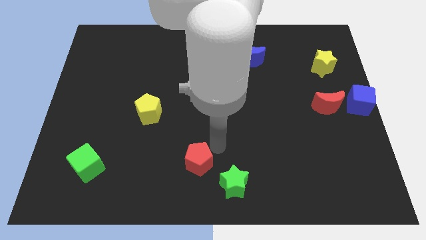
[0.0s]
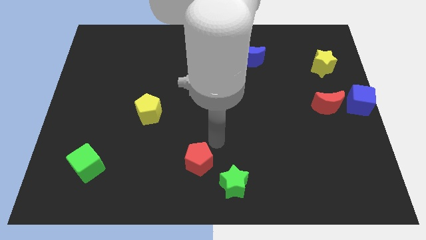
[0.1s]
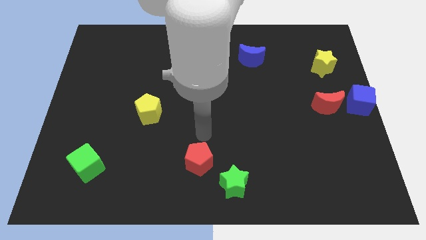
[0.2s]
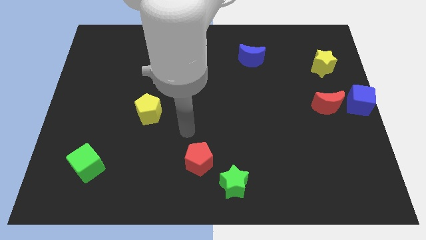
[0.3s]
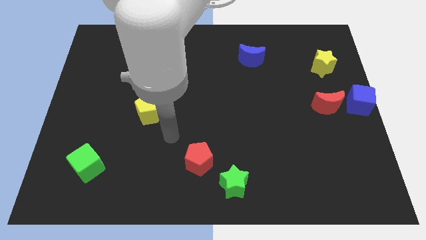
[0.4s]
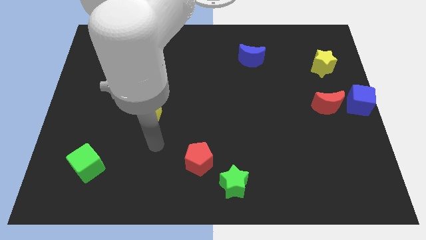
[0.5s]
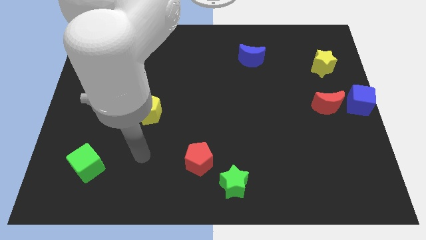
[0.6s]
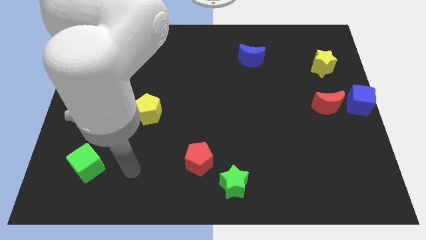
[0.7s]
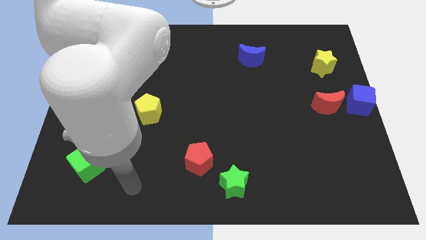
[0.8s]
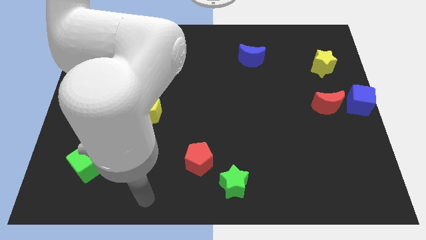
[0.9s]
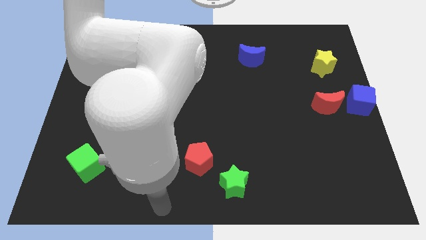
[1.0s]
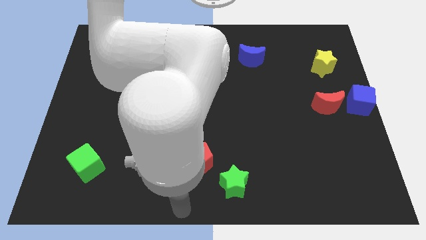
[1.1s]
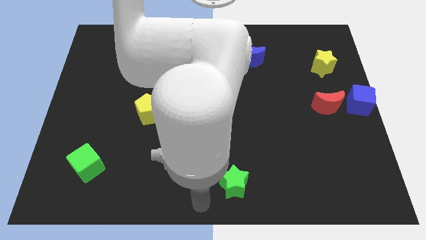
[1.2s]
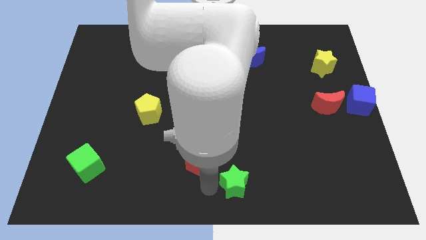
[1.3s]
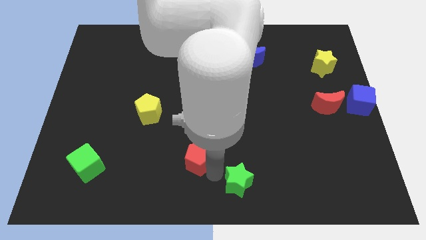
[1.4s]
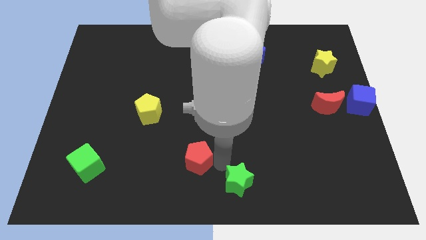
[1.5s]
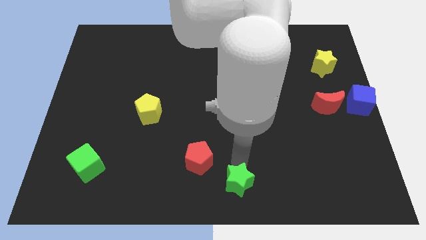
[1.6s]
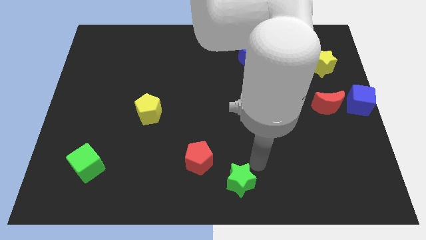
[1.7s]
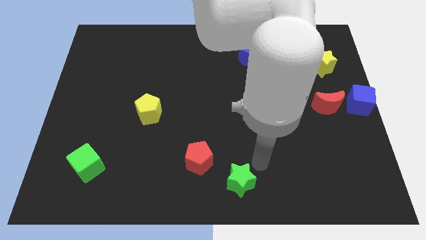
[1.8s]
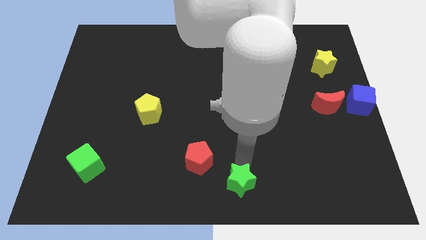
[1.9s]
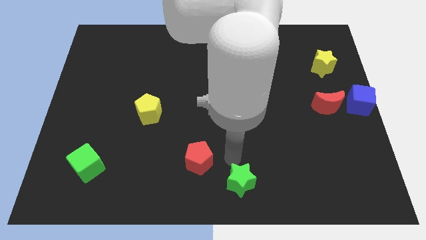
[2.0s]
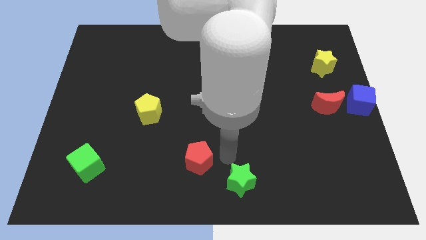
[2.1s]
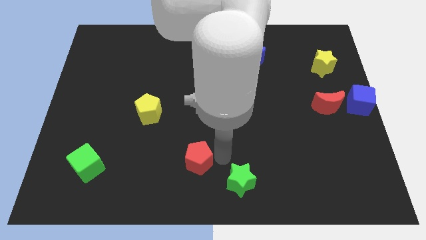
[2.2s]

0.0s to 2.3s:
separate the red pentagon and green star

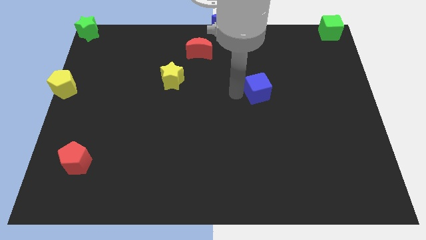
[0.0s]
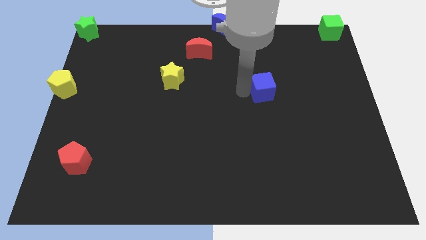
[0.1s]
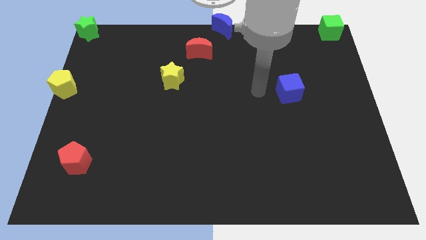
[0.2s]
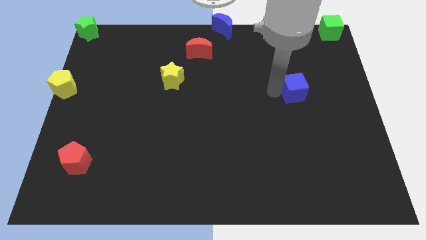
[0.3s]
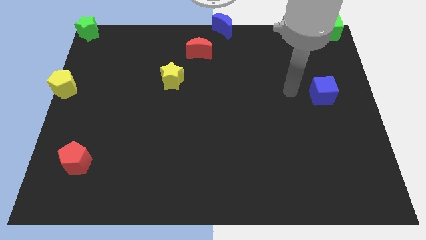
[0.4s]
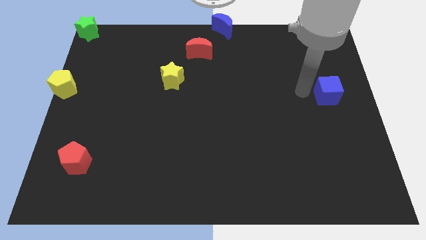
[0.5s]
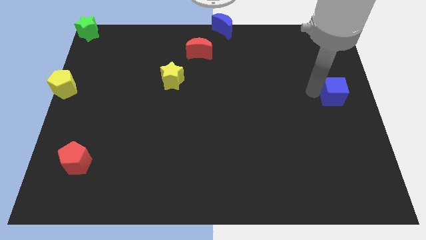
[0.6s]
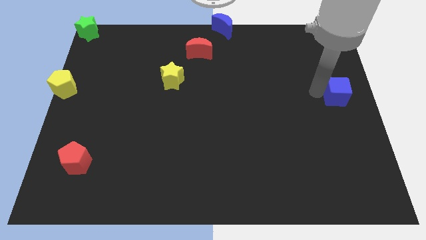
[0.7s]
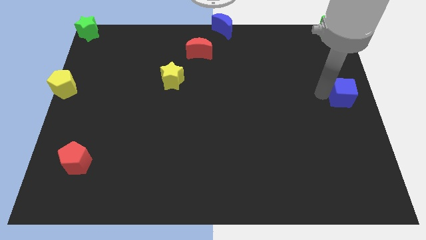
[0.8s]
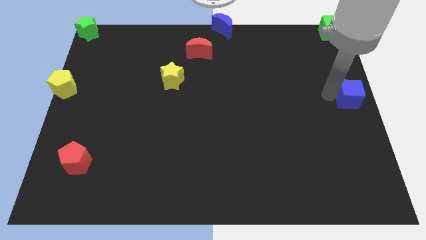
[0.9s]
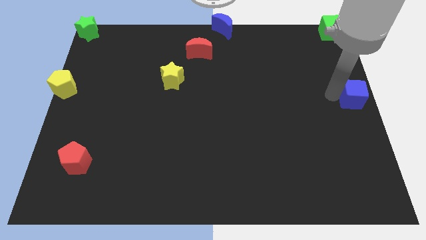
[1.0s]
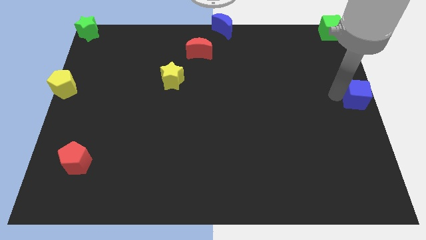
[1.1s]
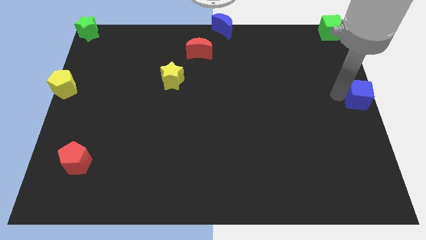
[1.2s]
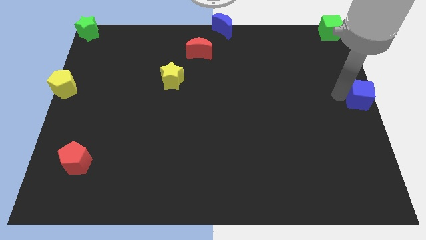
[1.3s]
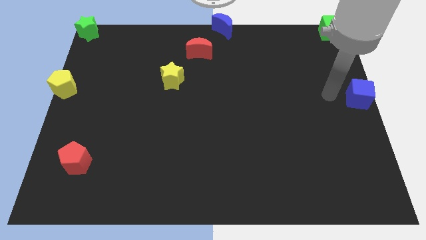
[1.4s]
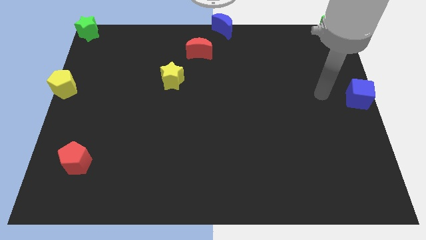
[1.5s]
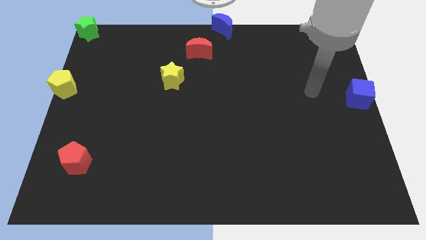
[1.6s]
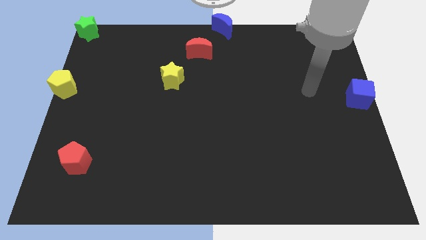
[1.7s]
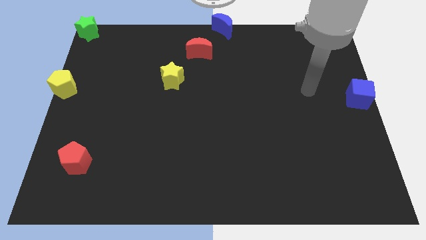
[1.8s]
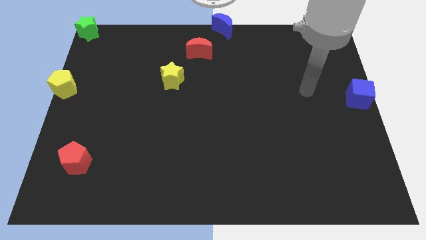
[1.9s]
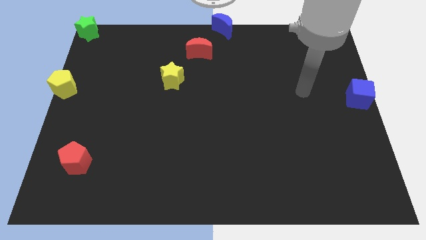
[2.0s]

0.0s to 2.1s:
place the blue cube to the right center

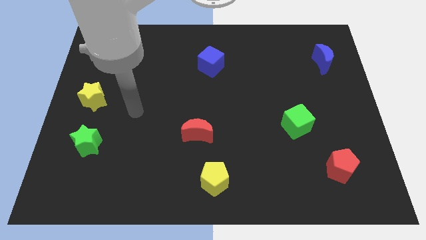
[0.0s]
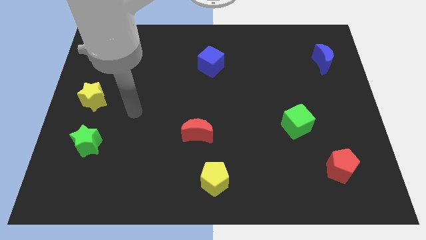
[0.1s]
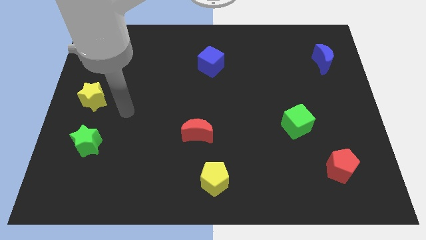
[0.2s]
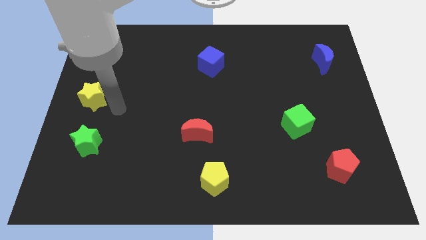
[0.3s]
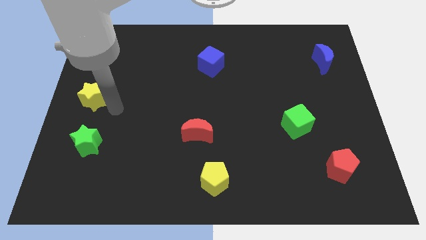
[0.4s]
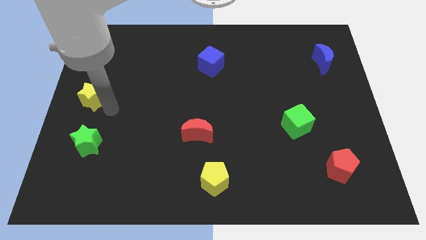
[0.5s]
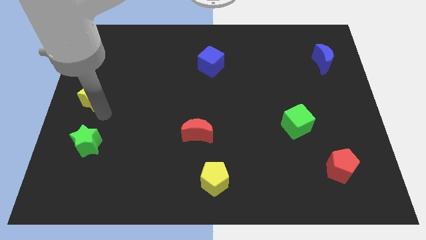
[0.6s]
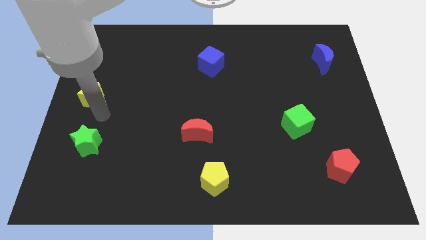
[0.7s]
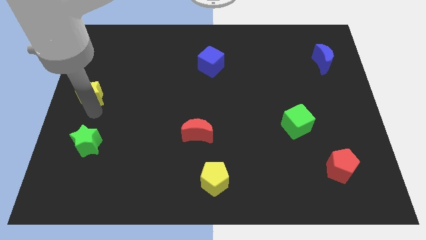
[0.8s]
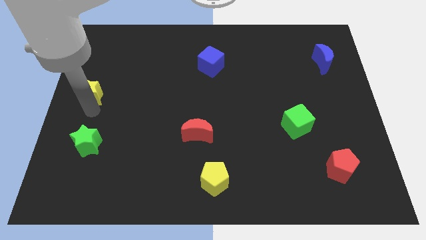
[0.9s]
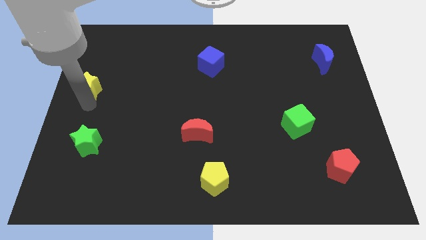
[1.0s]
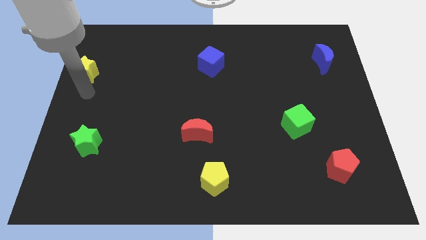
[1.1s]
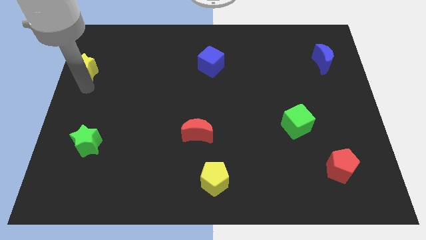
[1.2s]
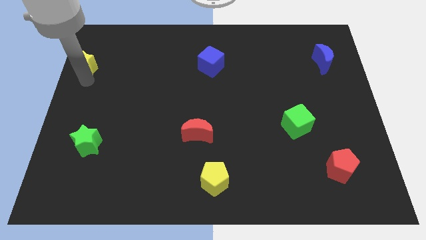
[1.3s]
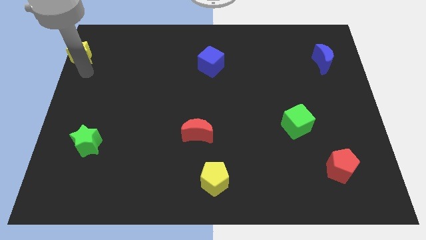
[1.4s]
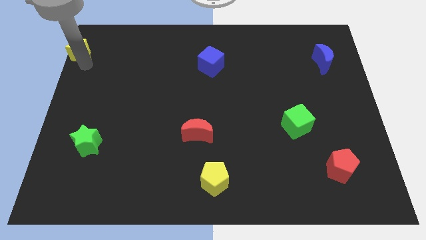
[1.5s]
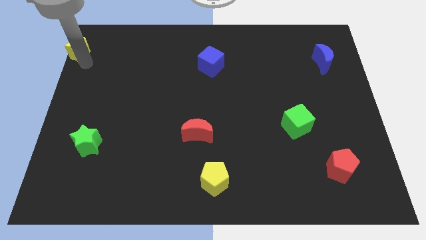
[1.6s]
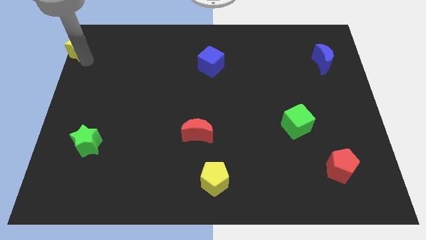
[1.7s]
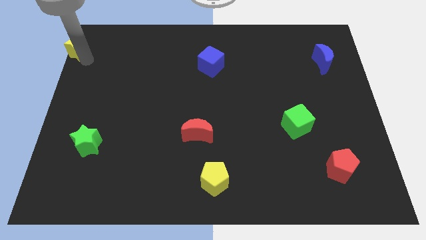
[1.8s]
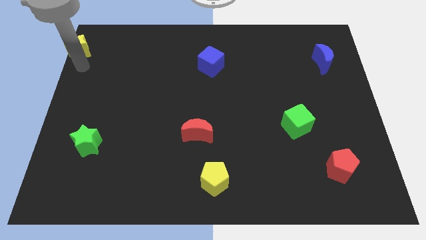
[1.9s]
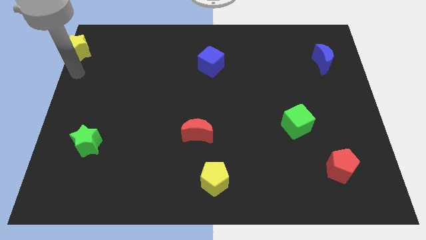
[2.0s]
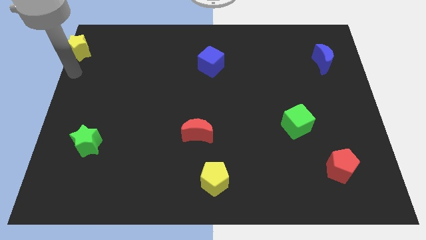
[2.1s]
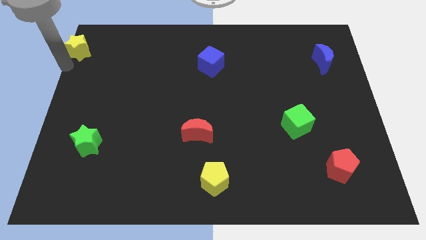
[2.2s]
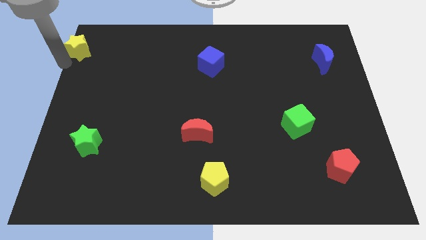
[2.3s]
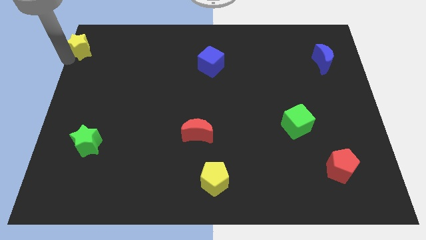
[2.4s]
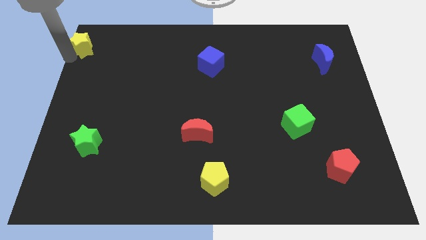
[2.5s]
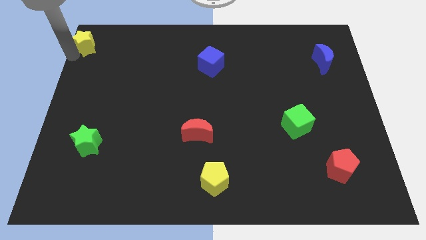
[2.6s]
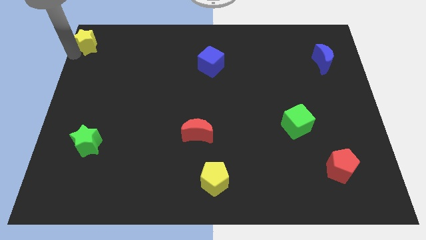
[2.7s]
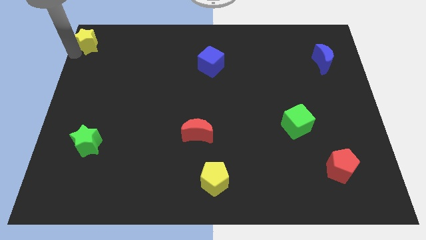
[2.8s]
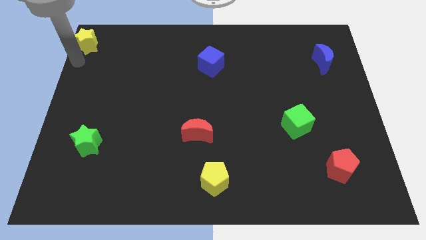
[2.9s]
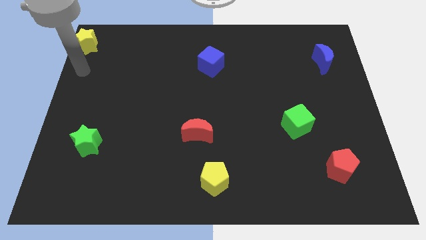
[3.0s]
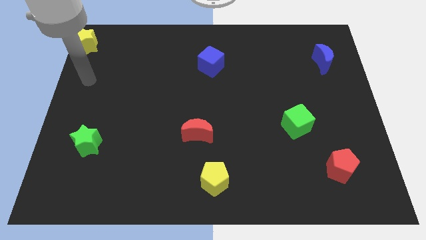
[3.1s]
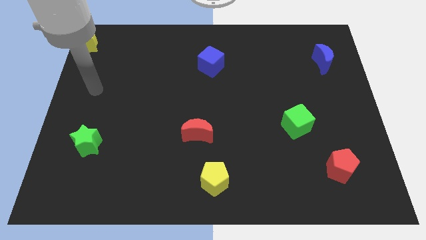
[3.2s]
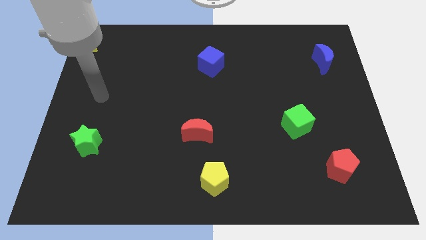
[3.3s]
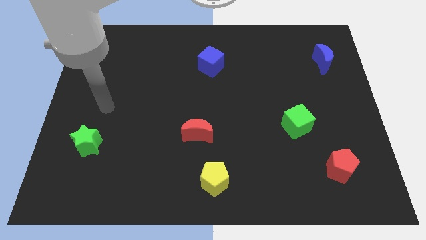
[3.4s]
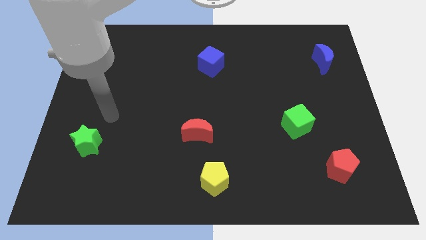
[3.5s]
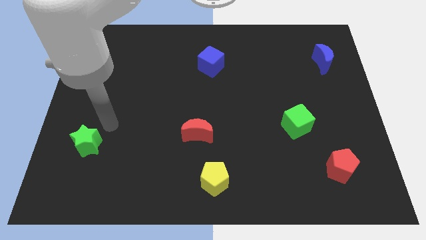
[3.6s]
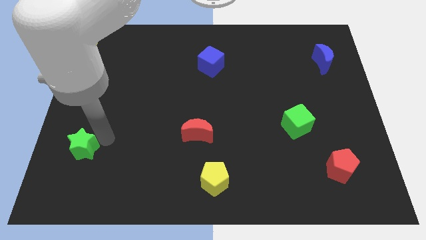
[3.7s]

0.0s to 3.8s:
move yellow star slightly to the top left corner of the board

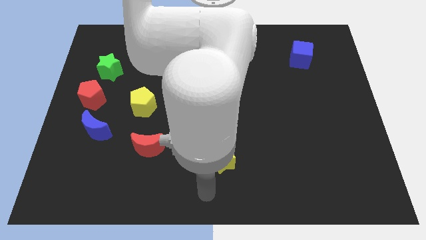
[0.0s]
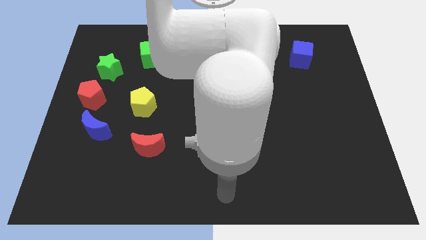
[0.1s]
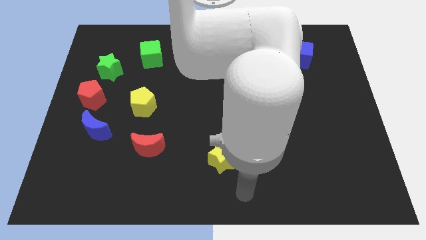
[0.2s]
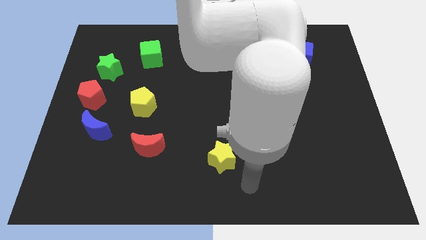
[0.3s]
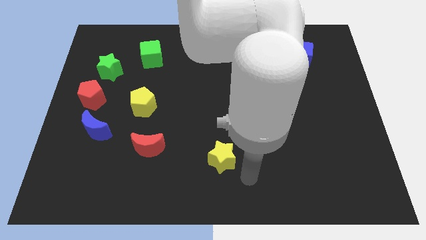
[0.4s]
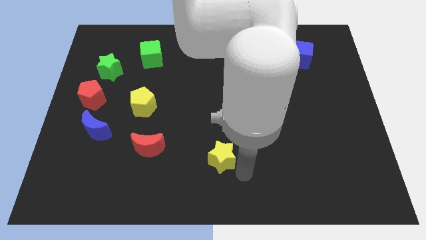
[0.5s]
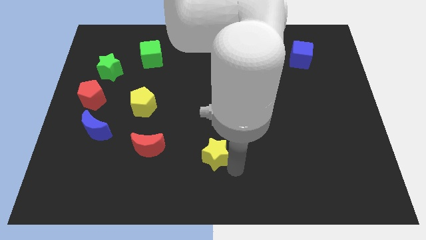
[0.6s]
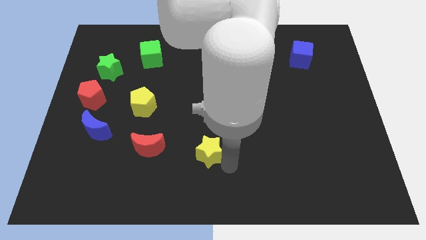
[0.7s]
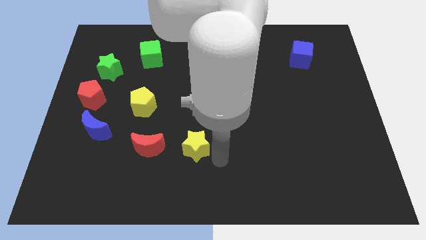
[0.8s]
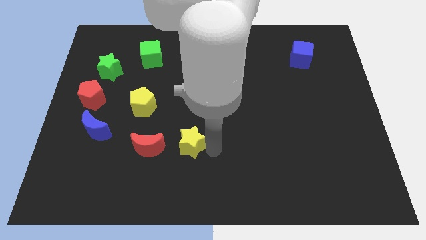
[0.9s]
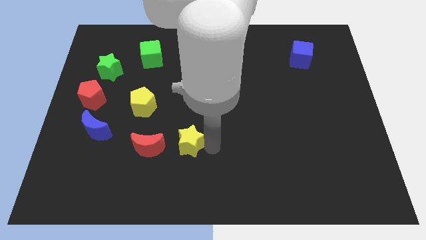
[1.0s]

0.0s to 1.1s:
place the yellow star right to the red moon
